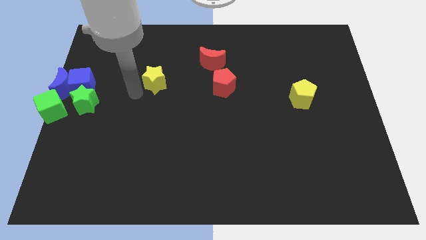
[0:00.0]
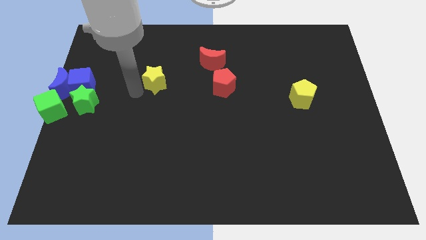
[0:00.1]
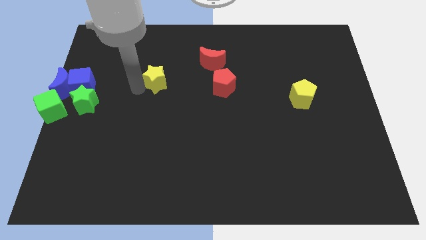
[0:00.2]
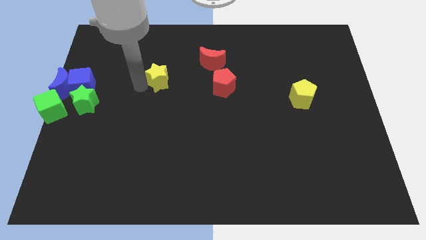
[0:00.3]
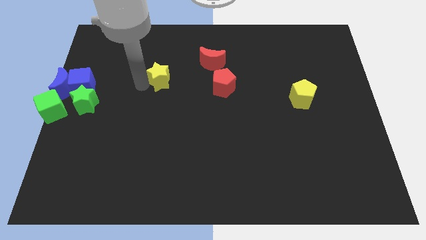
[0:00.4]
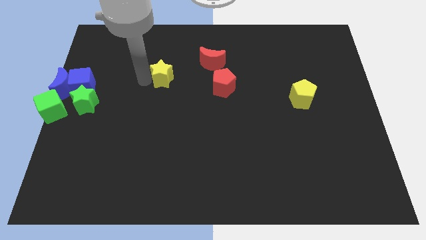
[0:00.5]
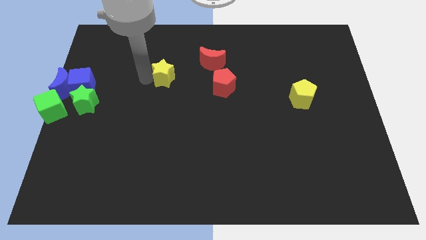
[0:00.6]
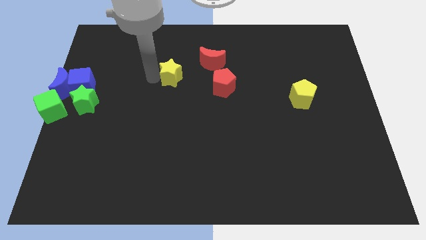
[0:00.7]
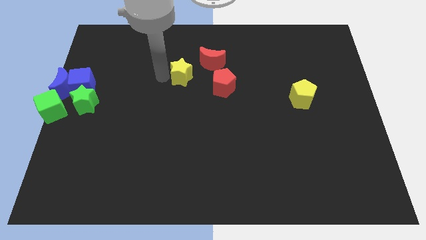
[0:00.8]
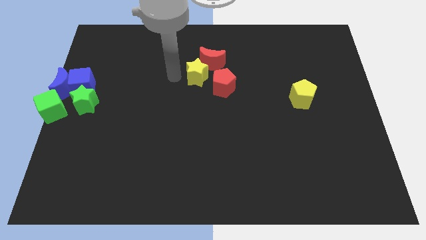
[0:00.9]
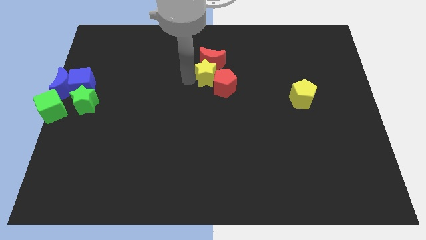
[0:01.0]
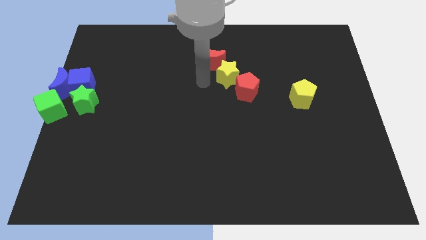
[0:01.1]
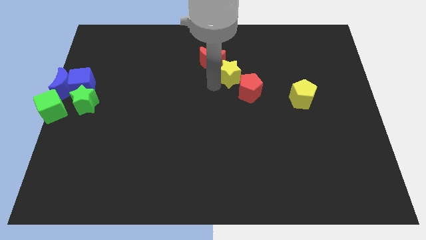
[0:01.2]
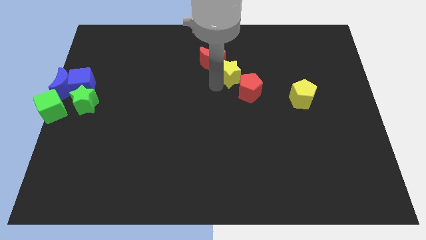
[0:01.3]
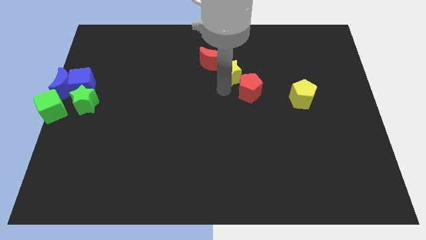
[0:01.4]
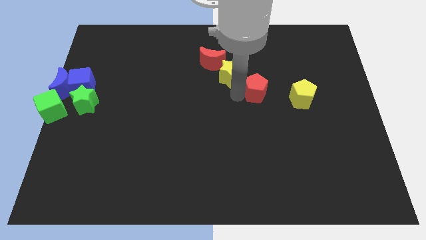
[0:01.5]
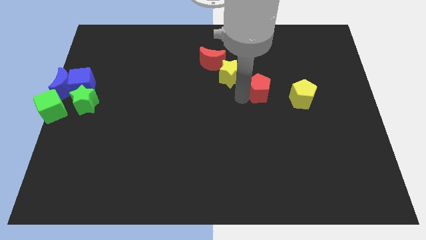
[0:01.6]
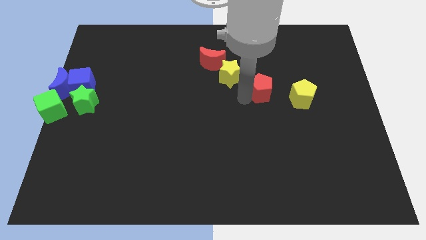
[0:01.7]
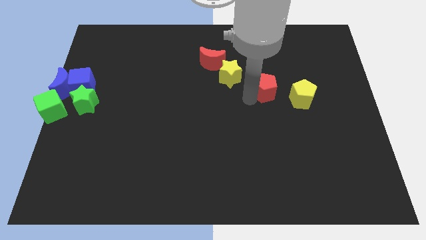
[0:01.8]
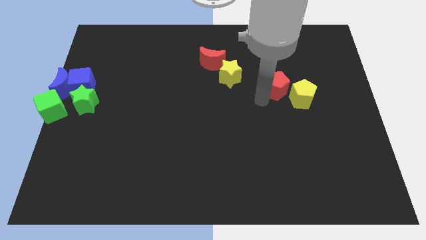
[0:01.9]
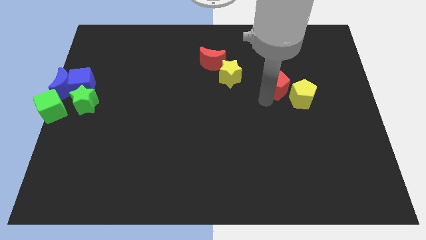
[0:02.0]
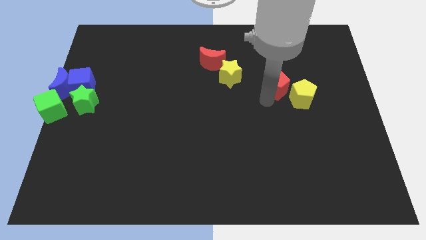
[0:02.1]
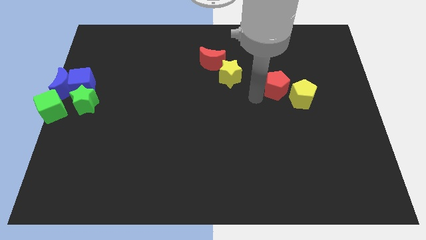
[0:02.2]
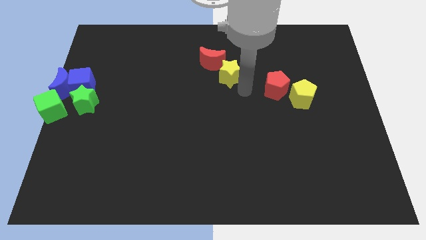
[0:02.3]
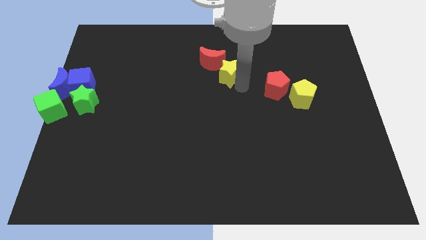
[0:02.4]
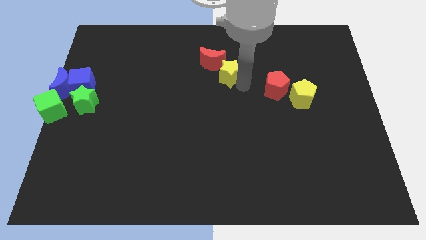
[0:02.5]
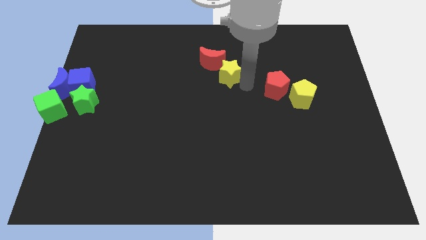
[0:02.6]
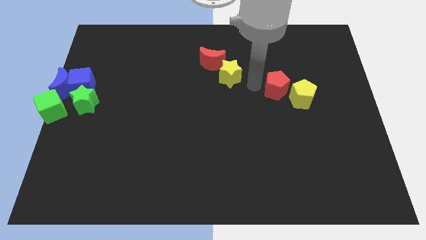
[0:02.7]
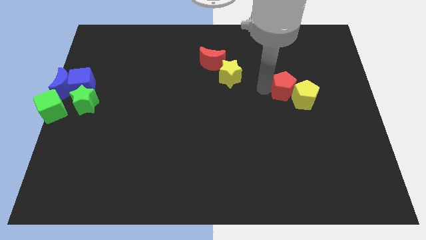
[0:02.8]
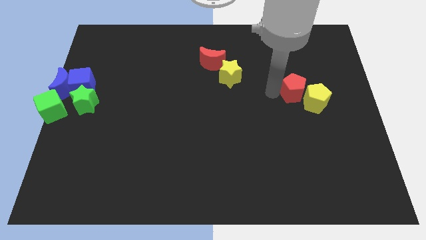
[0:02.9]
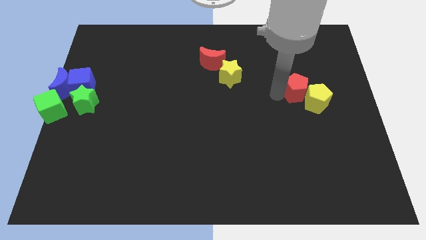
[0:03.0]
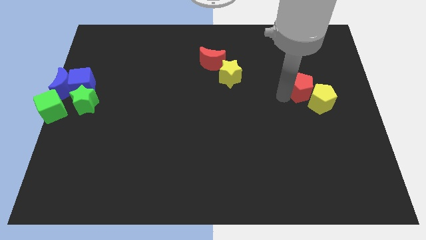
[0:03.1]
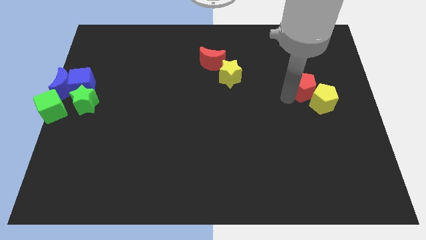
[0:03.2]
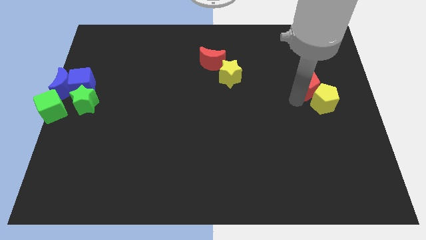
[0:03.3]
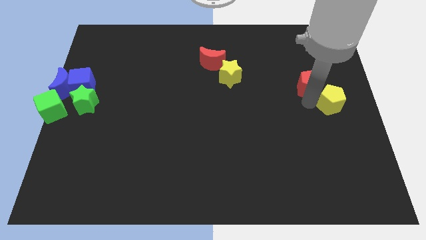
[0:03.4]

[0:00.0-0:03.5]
move the red pentagon into the yellow pentagon

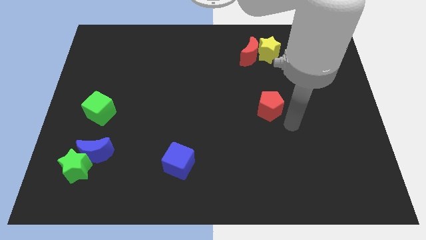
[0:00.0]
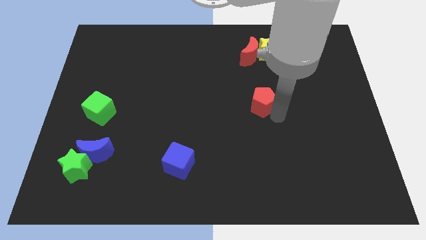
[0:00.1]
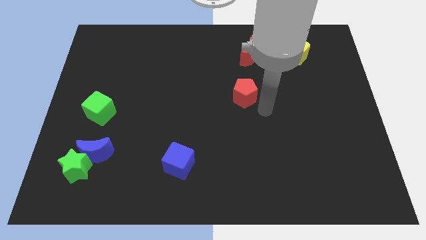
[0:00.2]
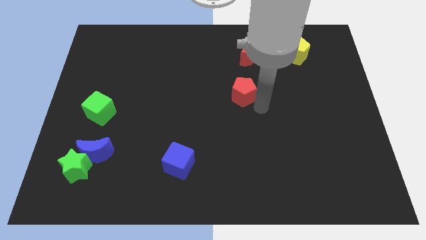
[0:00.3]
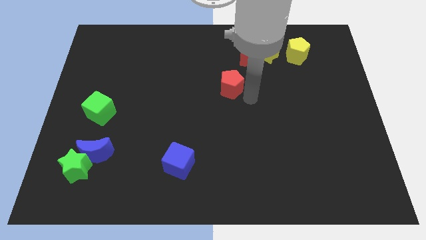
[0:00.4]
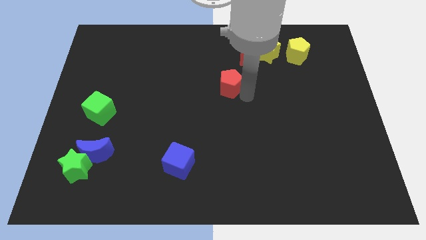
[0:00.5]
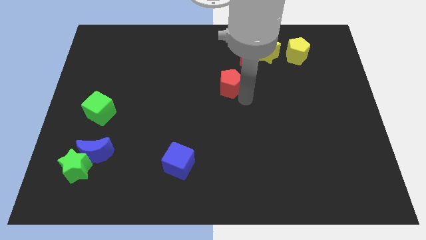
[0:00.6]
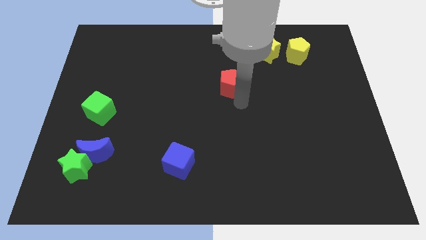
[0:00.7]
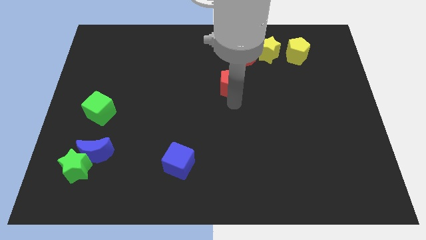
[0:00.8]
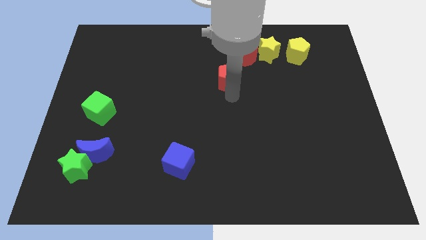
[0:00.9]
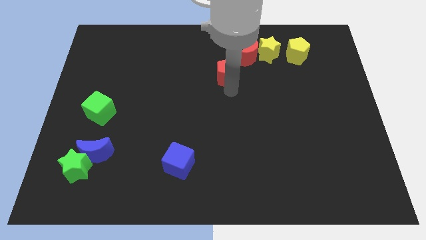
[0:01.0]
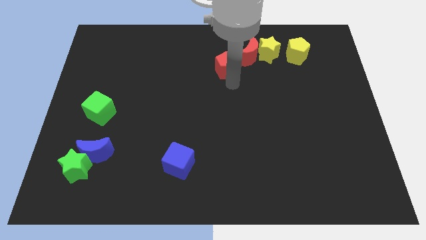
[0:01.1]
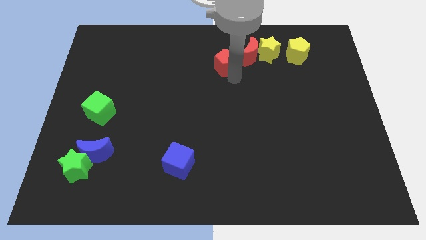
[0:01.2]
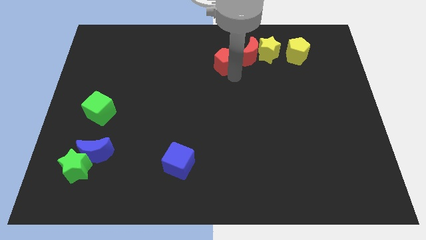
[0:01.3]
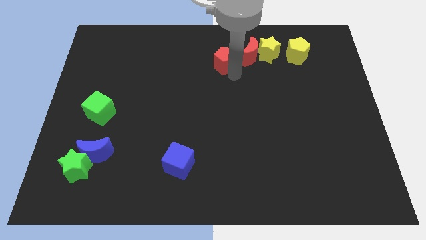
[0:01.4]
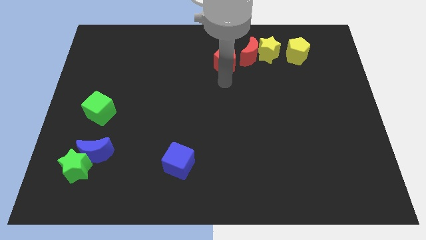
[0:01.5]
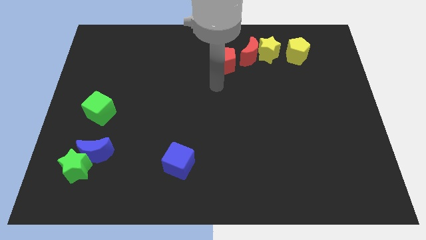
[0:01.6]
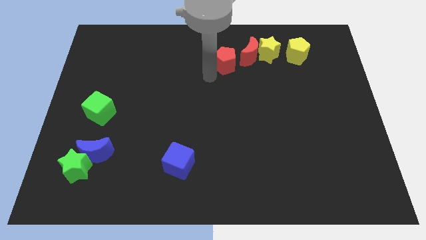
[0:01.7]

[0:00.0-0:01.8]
put the red pentagon at the bottom left of the red crescent

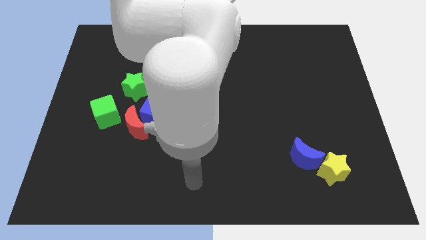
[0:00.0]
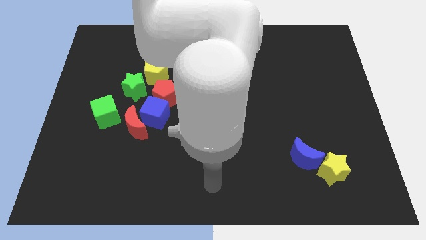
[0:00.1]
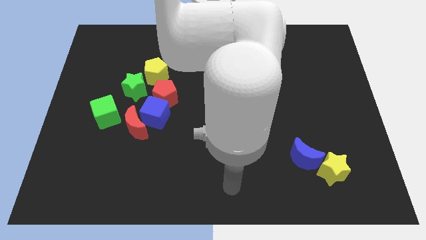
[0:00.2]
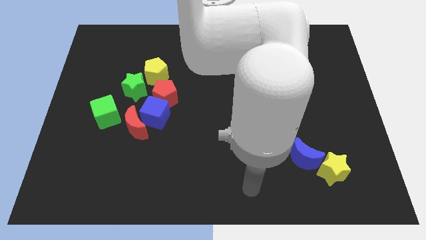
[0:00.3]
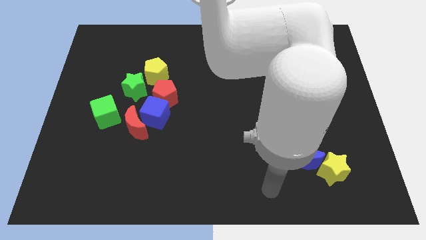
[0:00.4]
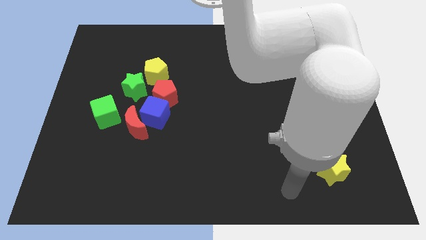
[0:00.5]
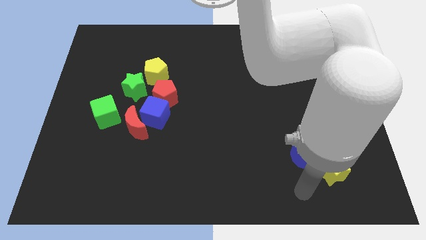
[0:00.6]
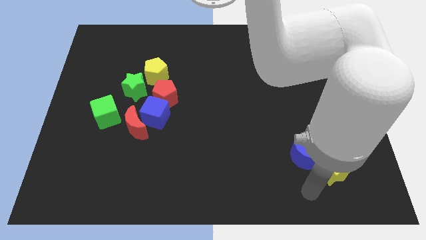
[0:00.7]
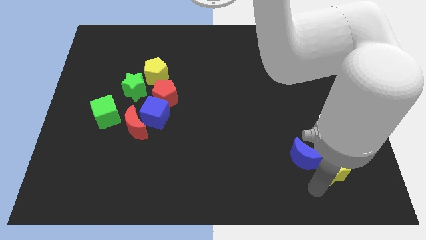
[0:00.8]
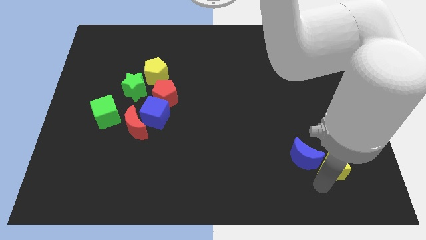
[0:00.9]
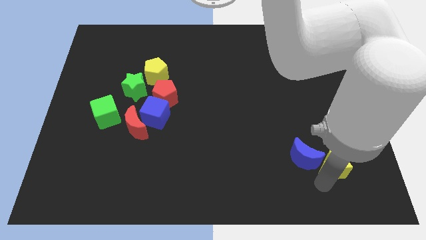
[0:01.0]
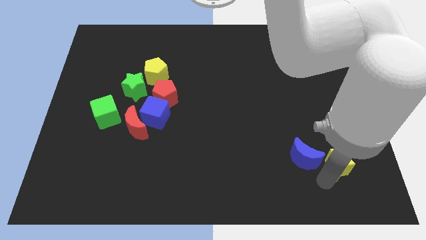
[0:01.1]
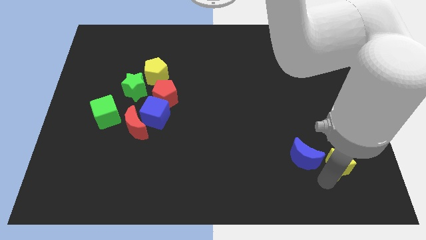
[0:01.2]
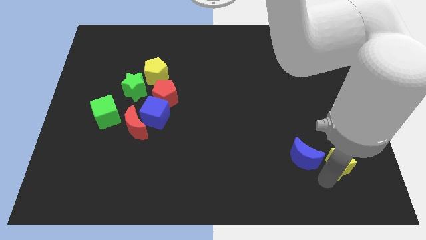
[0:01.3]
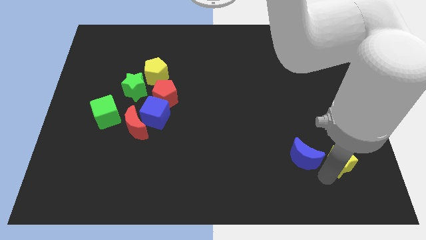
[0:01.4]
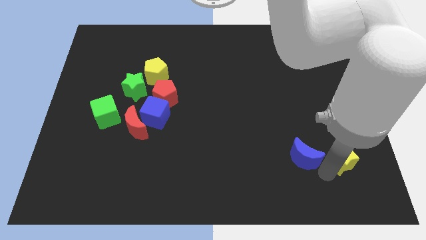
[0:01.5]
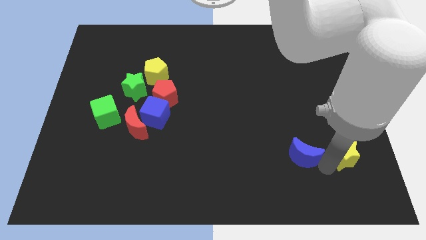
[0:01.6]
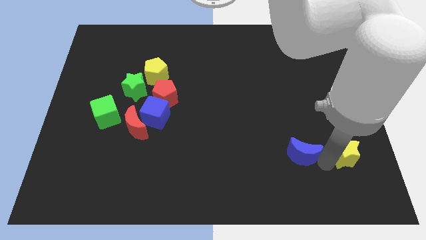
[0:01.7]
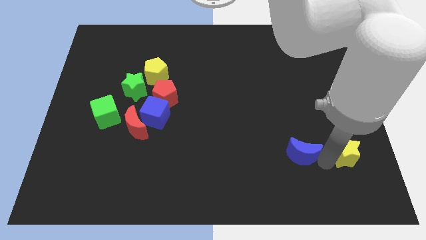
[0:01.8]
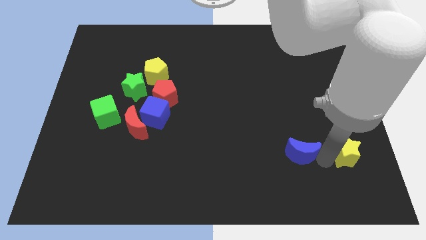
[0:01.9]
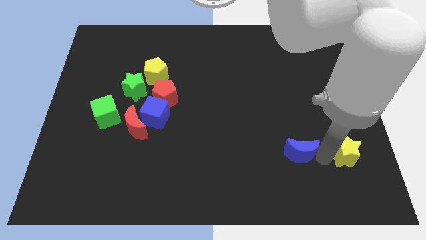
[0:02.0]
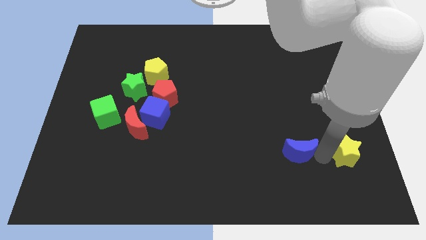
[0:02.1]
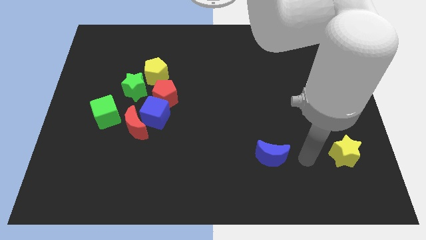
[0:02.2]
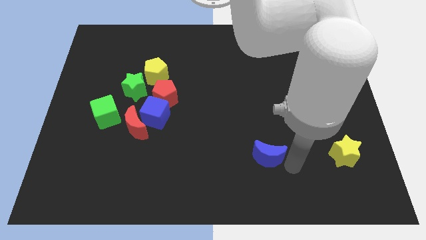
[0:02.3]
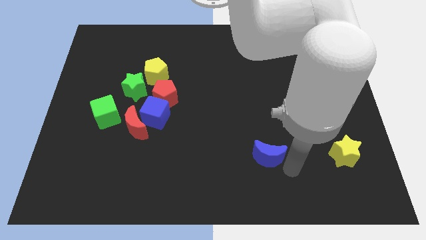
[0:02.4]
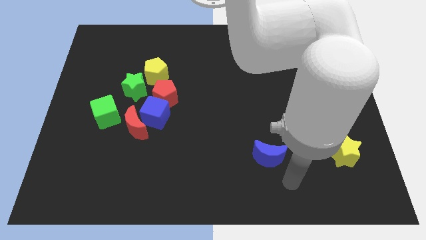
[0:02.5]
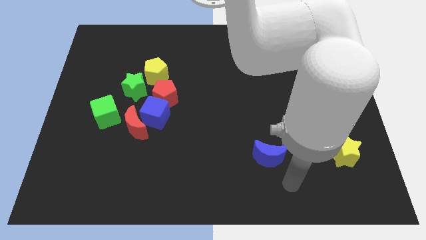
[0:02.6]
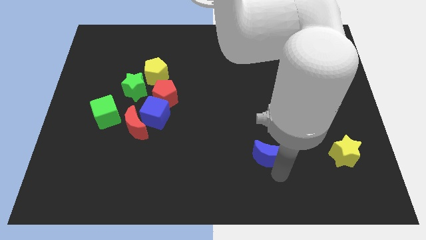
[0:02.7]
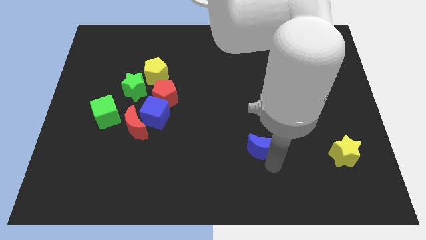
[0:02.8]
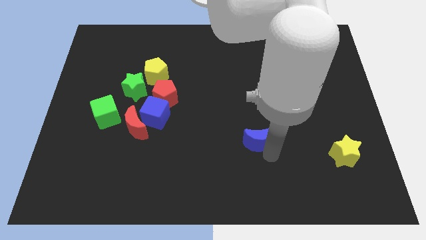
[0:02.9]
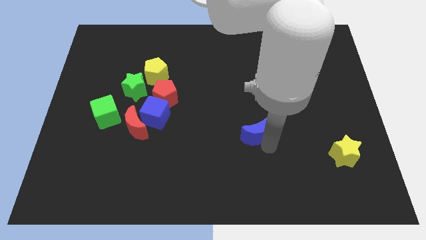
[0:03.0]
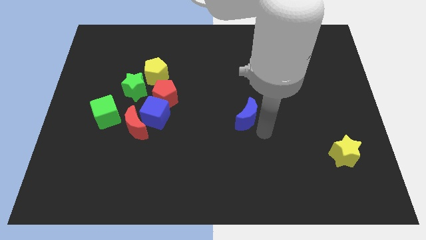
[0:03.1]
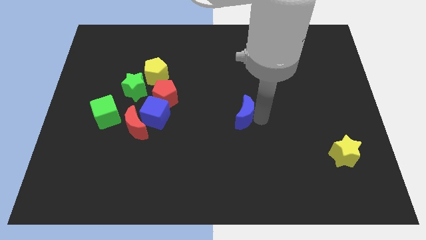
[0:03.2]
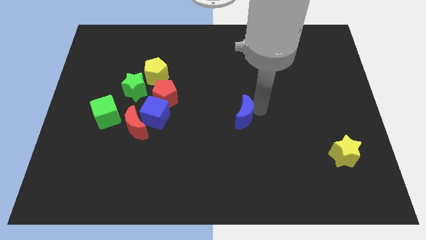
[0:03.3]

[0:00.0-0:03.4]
seperate blue moon and yellow star

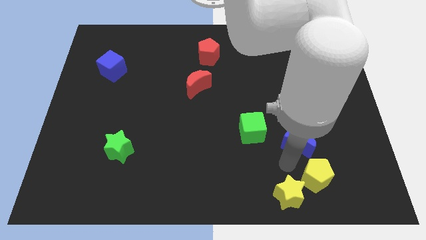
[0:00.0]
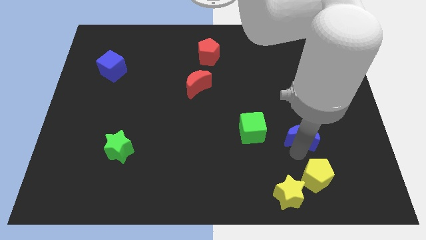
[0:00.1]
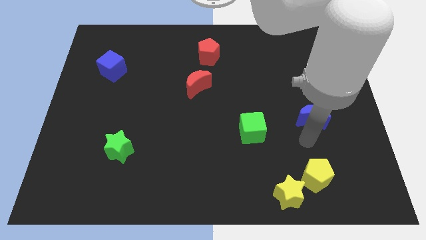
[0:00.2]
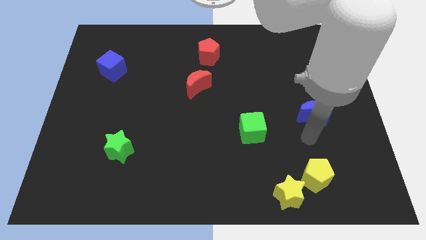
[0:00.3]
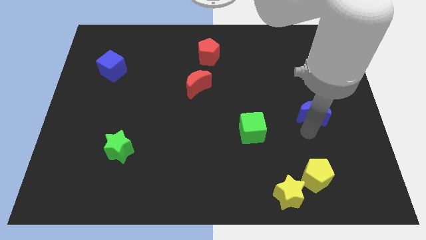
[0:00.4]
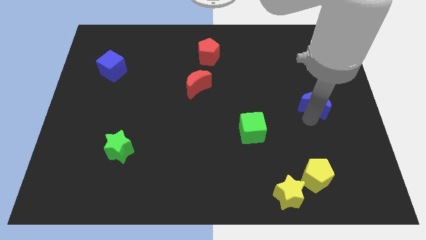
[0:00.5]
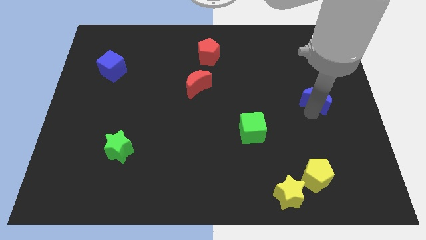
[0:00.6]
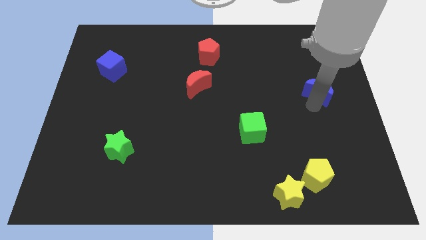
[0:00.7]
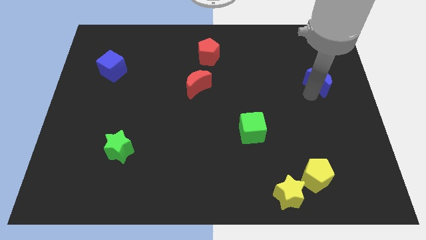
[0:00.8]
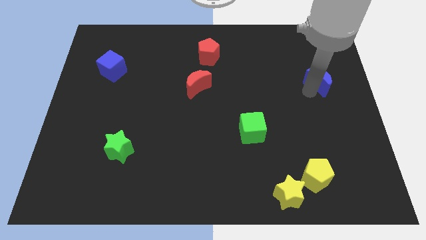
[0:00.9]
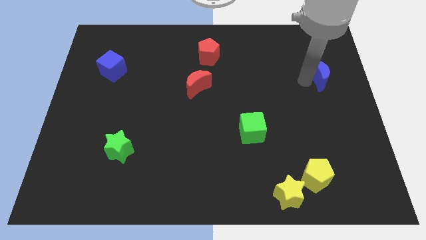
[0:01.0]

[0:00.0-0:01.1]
separate blue moon from yellow pentagon
